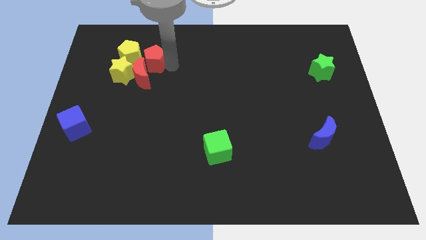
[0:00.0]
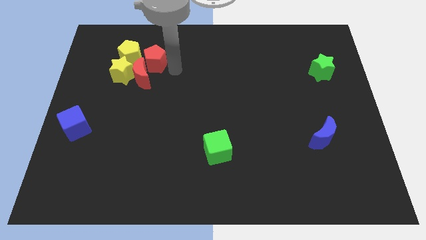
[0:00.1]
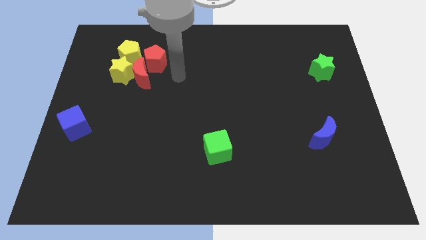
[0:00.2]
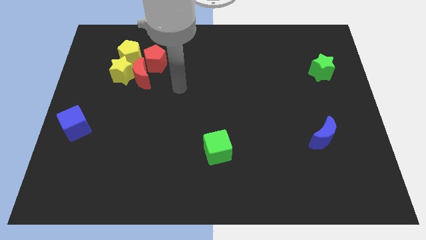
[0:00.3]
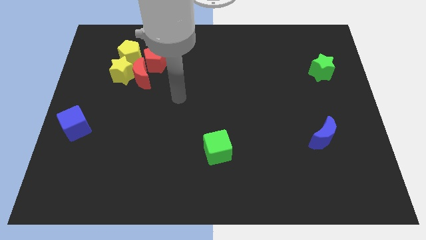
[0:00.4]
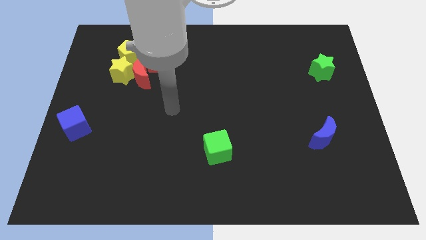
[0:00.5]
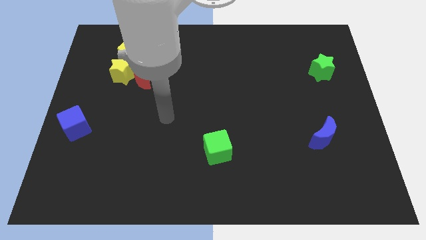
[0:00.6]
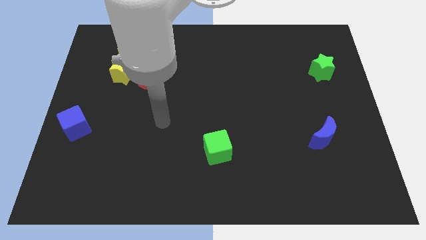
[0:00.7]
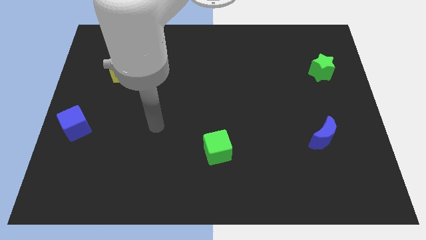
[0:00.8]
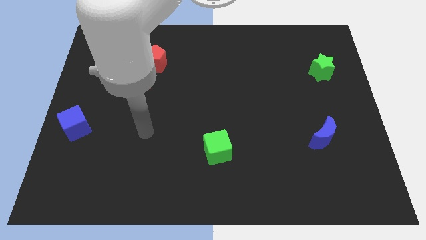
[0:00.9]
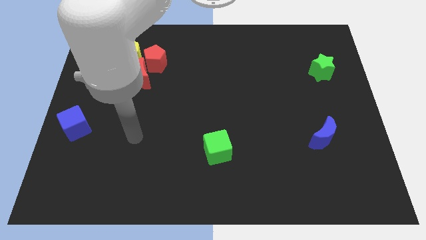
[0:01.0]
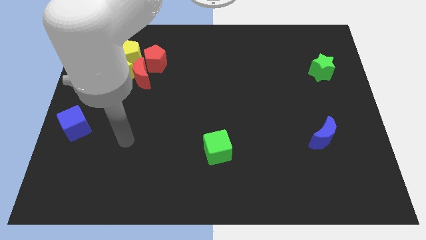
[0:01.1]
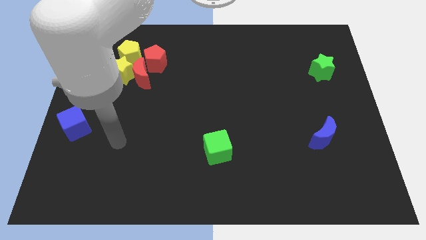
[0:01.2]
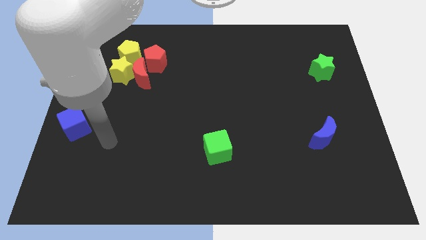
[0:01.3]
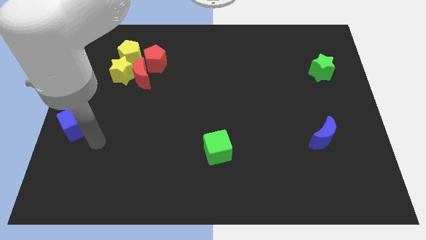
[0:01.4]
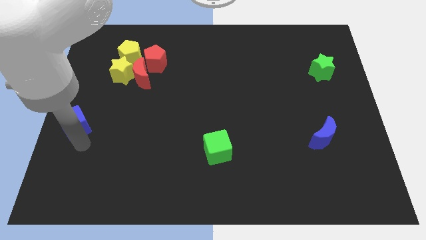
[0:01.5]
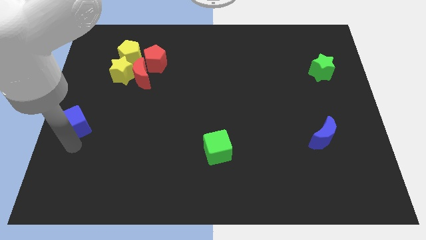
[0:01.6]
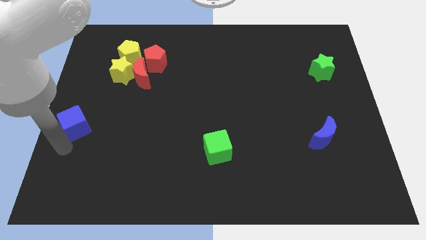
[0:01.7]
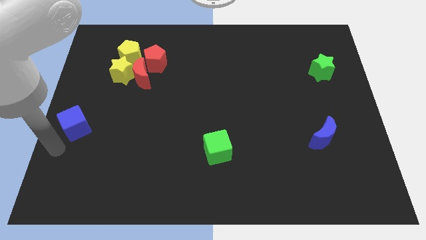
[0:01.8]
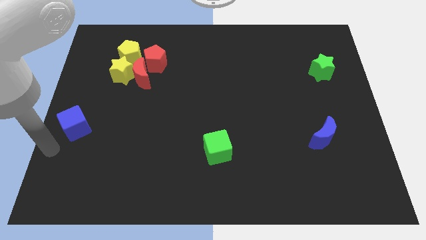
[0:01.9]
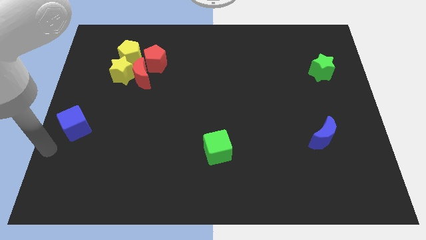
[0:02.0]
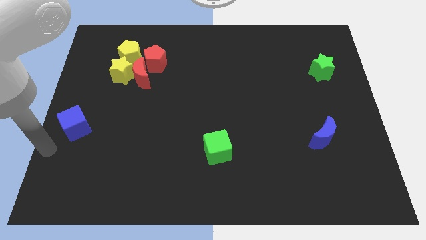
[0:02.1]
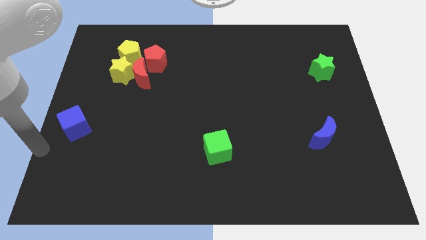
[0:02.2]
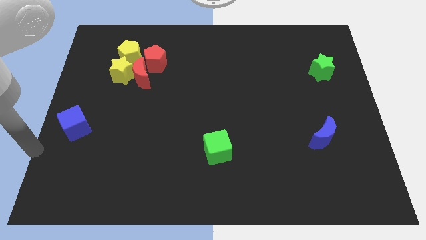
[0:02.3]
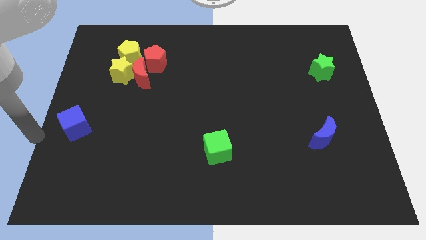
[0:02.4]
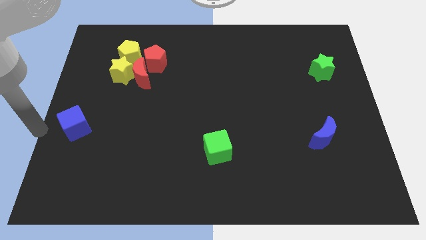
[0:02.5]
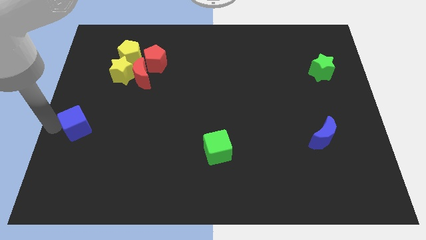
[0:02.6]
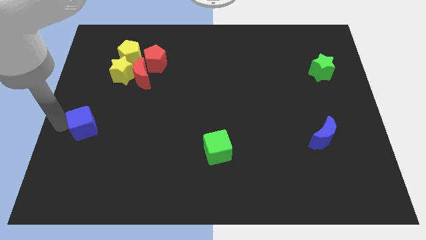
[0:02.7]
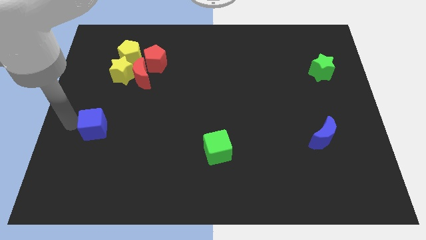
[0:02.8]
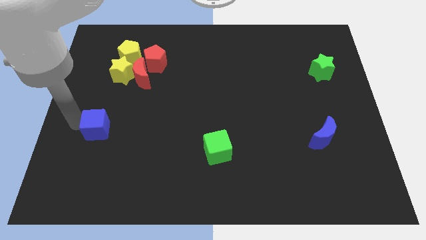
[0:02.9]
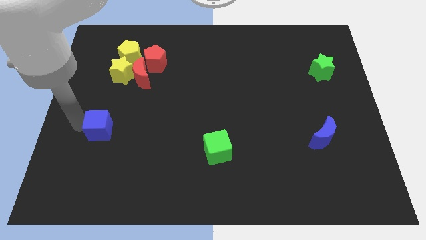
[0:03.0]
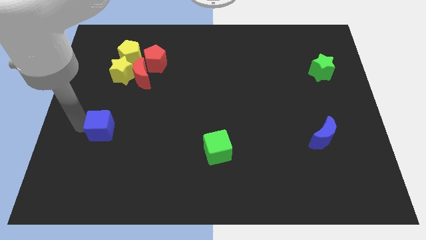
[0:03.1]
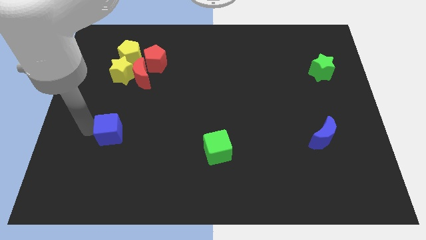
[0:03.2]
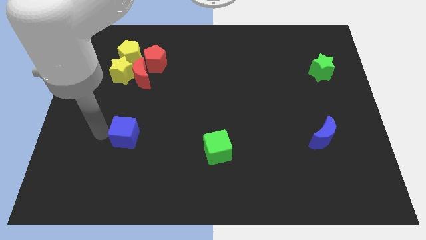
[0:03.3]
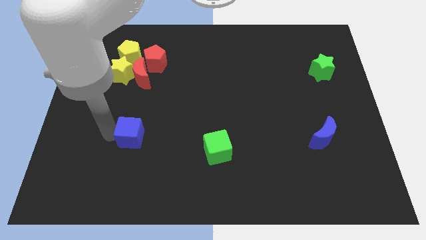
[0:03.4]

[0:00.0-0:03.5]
move the blue cube to the bottom of the yellow star

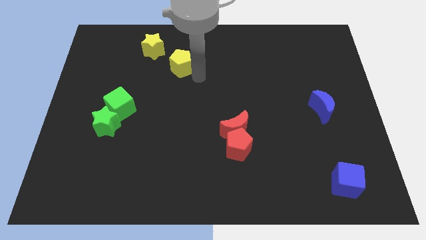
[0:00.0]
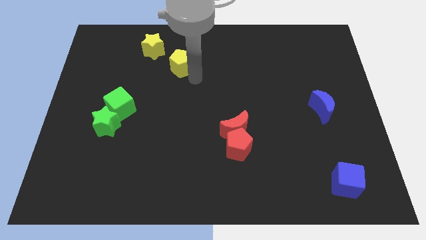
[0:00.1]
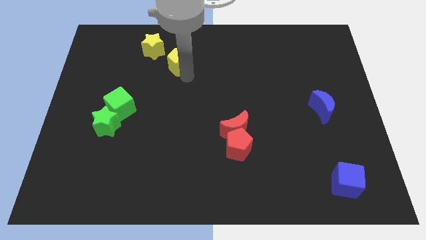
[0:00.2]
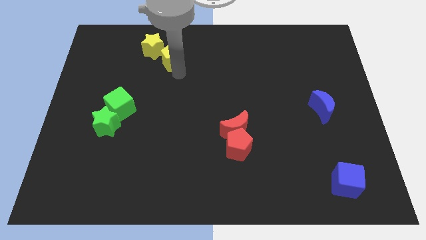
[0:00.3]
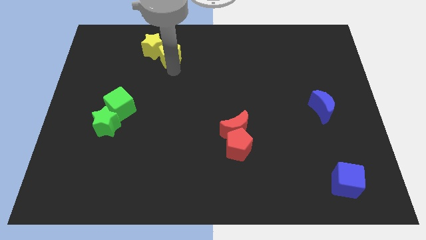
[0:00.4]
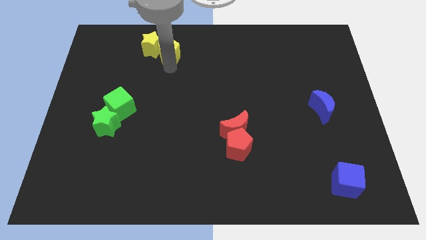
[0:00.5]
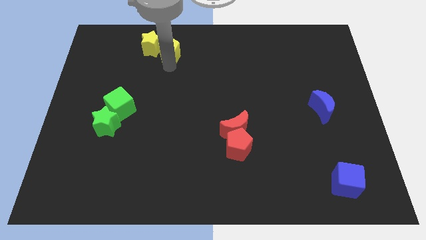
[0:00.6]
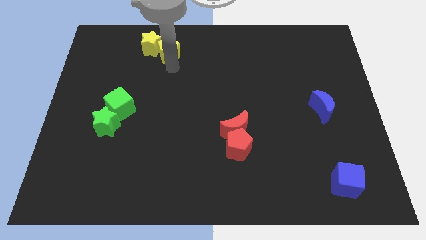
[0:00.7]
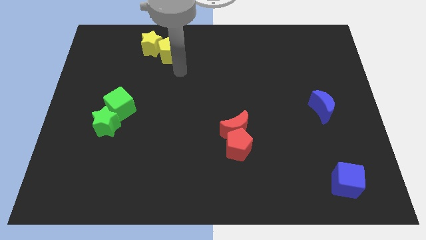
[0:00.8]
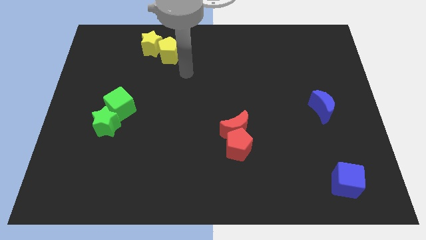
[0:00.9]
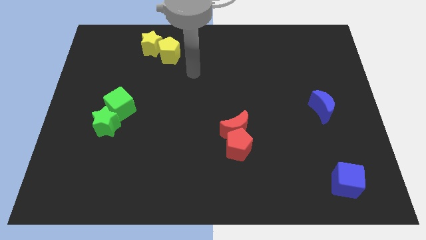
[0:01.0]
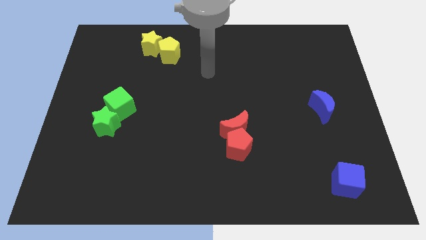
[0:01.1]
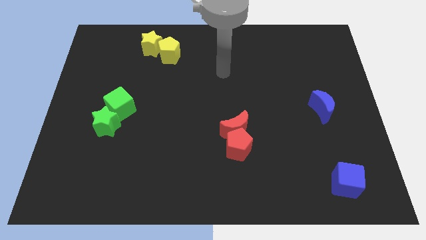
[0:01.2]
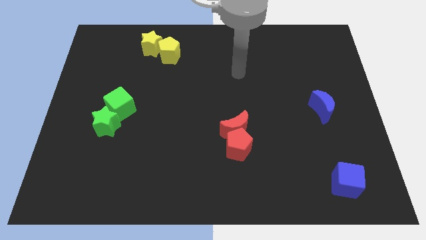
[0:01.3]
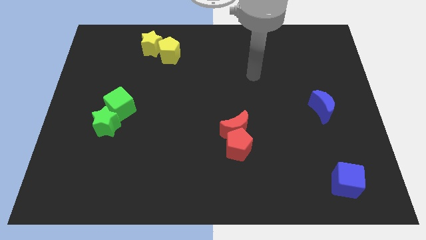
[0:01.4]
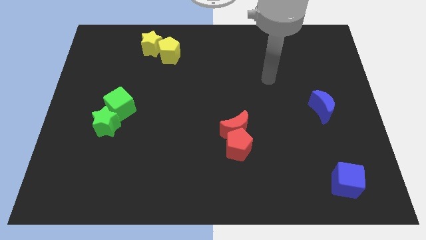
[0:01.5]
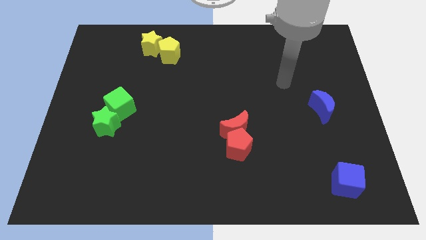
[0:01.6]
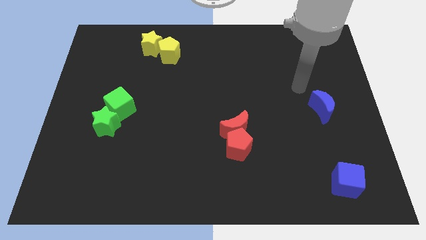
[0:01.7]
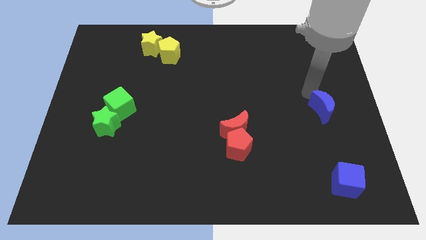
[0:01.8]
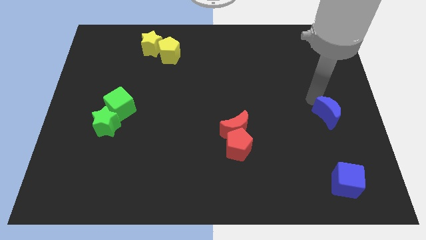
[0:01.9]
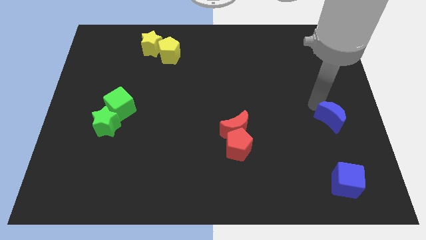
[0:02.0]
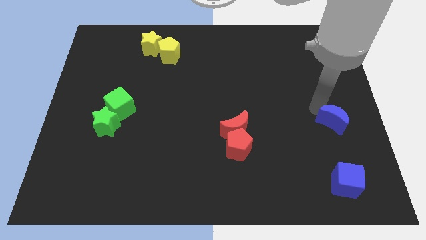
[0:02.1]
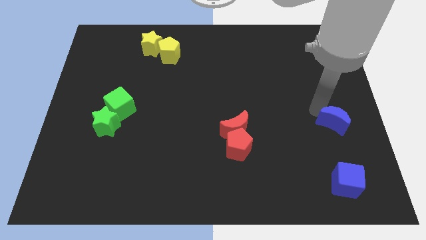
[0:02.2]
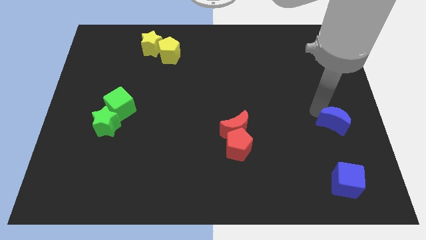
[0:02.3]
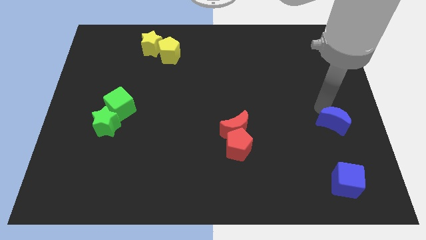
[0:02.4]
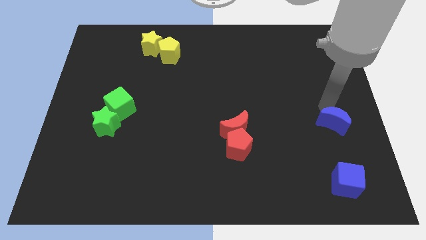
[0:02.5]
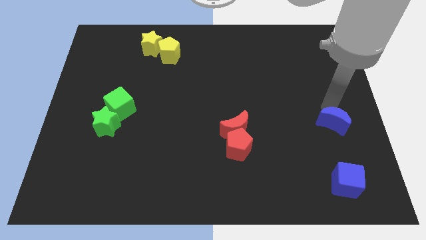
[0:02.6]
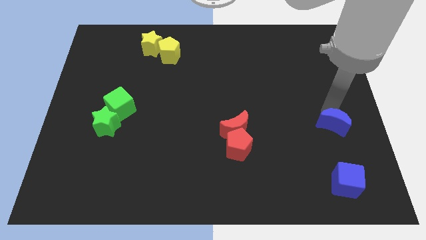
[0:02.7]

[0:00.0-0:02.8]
push the blue crescent to the bottom side of the board slightly

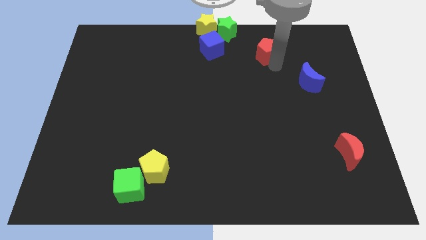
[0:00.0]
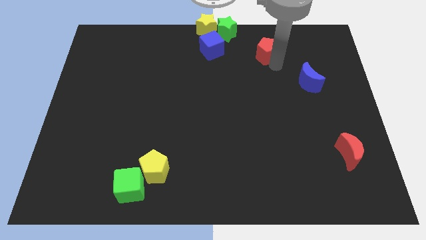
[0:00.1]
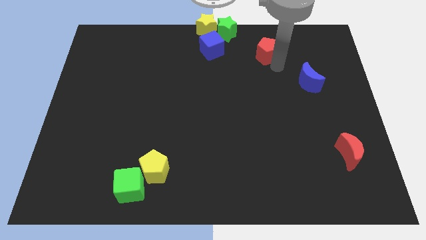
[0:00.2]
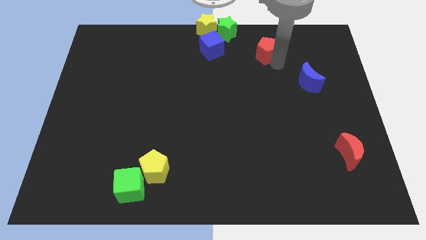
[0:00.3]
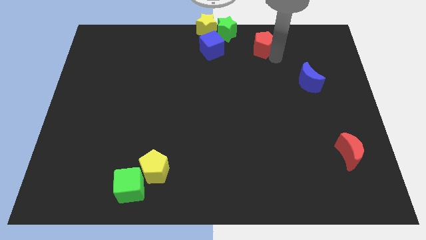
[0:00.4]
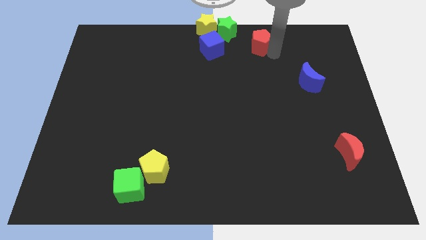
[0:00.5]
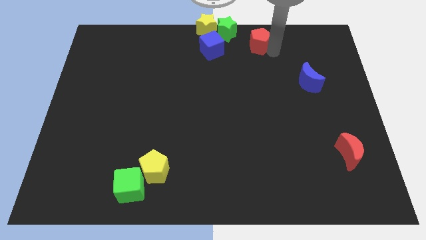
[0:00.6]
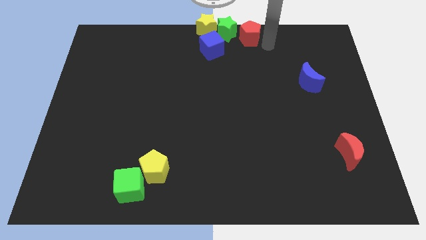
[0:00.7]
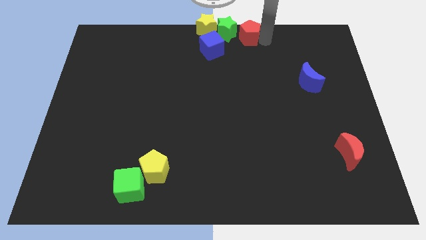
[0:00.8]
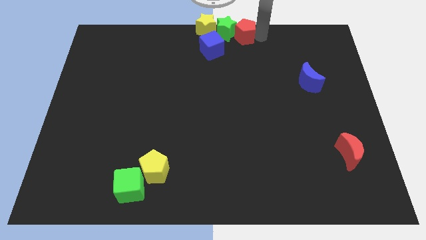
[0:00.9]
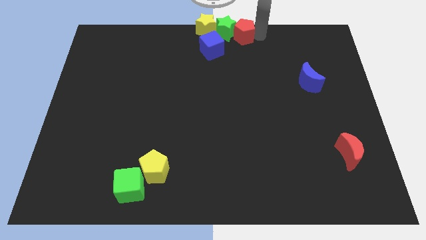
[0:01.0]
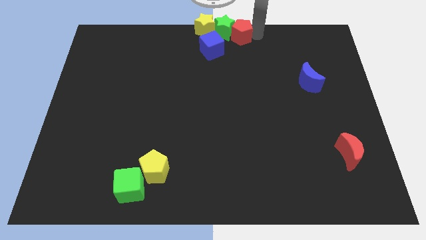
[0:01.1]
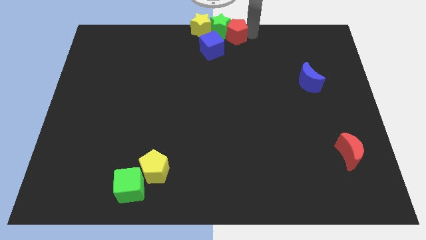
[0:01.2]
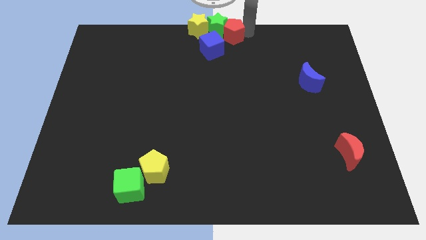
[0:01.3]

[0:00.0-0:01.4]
slide the red pentagon into the green star

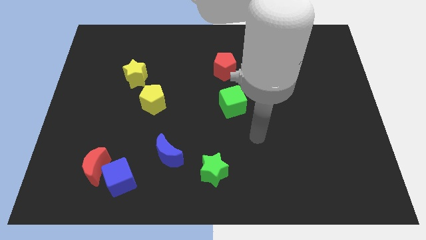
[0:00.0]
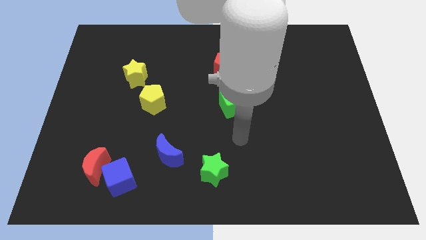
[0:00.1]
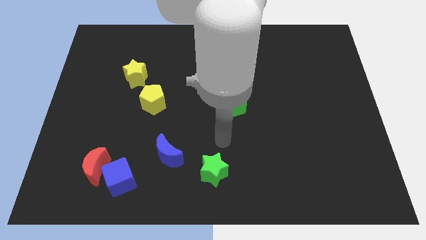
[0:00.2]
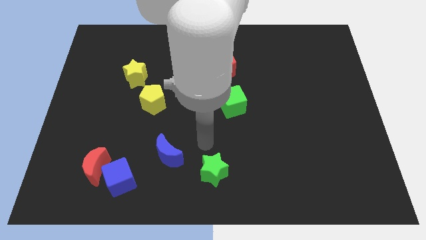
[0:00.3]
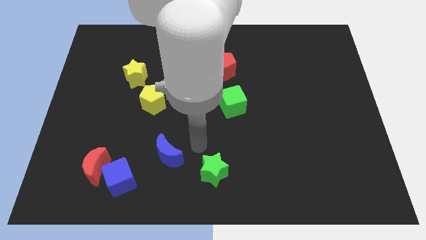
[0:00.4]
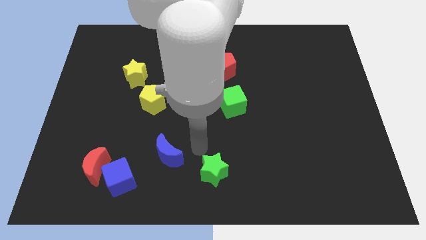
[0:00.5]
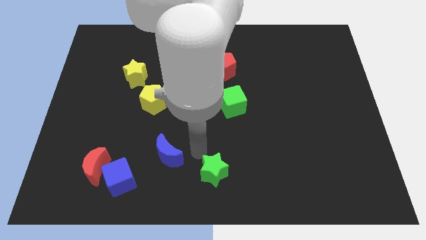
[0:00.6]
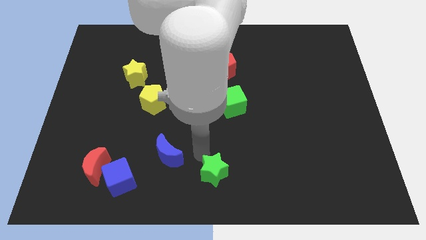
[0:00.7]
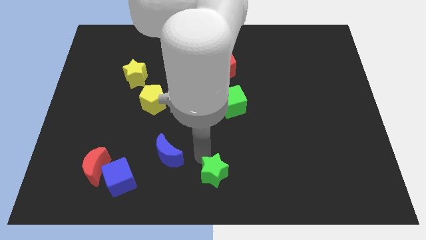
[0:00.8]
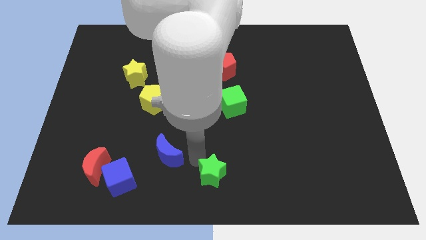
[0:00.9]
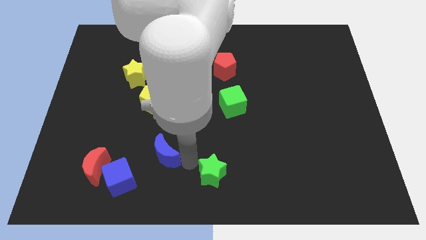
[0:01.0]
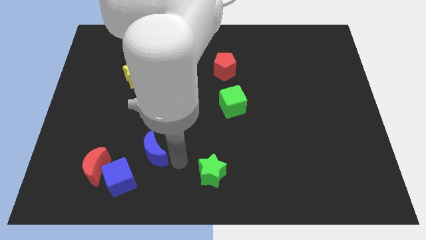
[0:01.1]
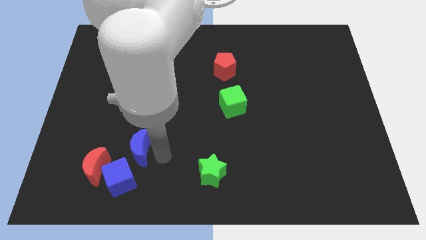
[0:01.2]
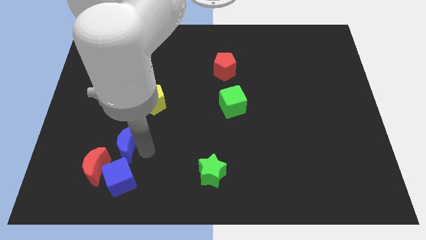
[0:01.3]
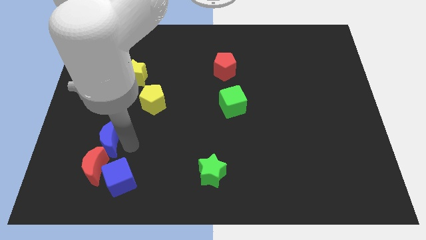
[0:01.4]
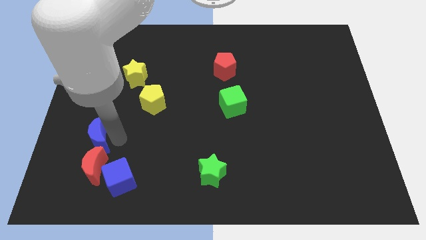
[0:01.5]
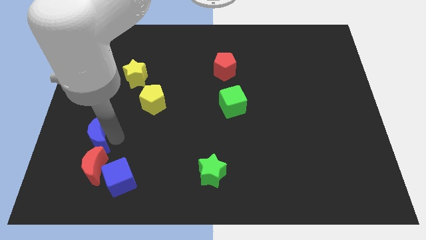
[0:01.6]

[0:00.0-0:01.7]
push the blue crescent to the top of the red crescent
